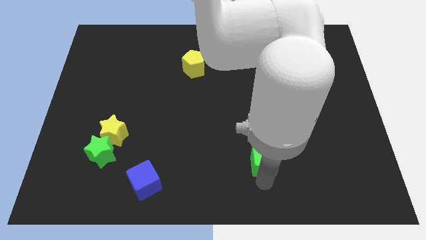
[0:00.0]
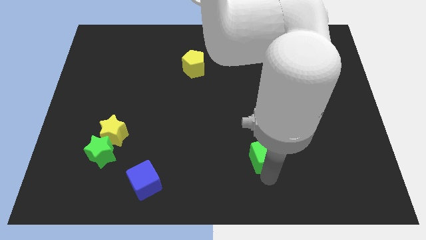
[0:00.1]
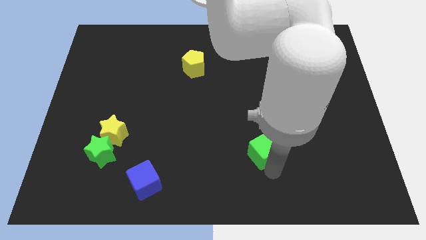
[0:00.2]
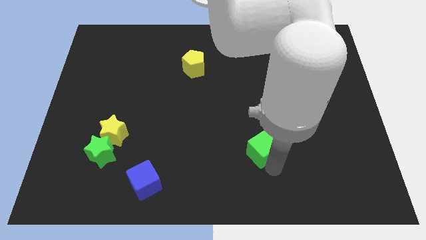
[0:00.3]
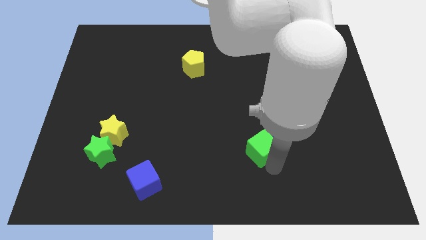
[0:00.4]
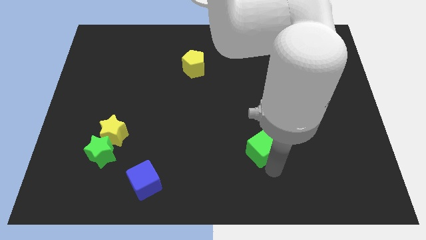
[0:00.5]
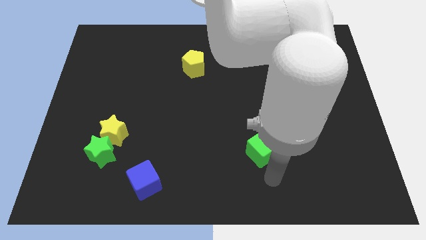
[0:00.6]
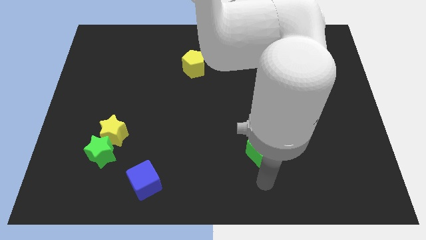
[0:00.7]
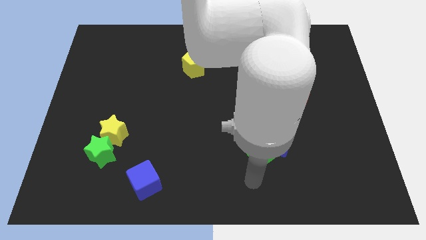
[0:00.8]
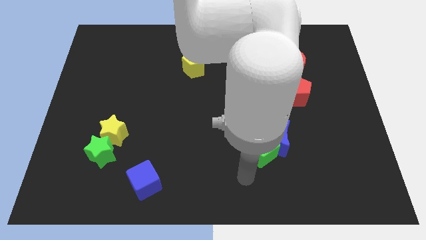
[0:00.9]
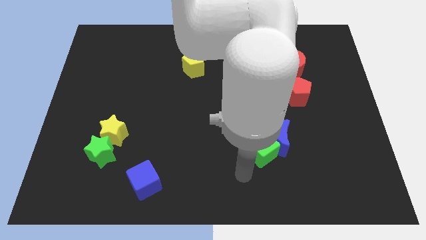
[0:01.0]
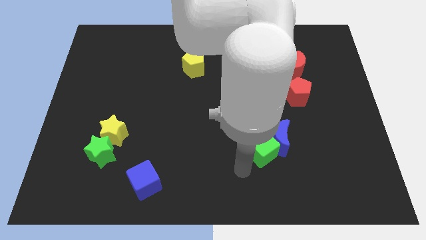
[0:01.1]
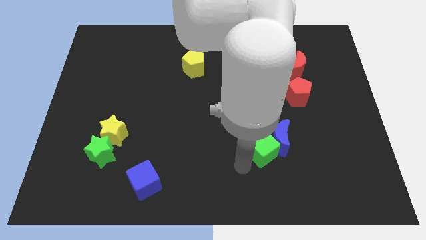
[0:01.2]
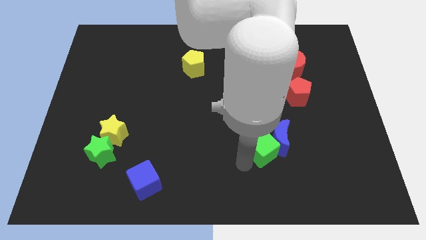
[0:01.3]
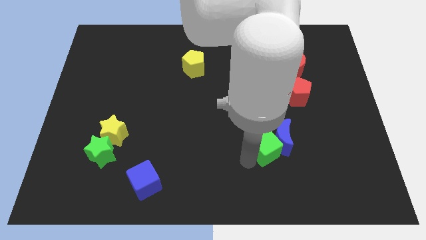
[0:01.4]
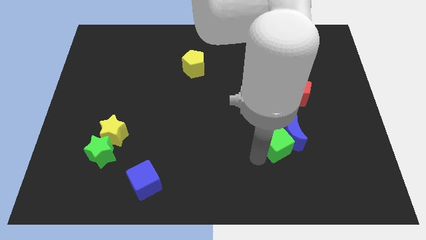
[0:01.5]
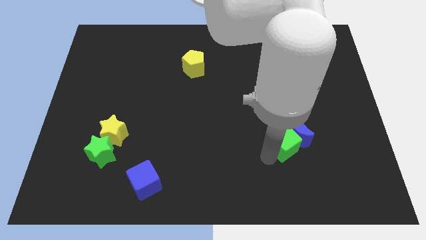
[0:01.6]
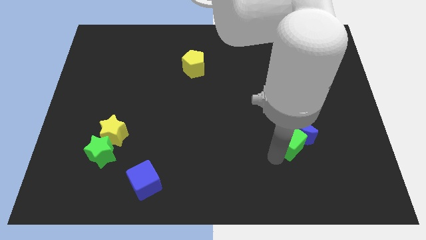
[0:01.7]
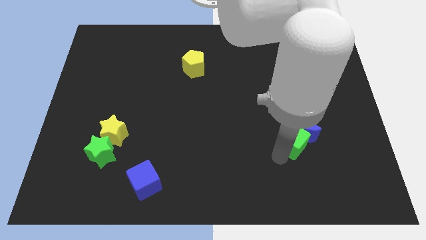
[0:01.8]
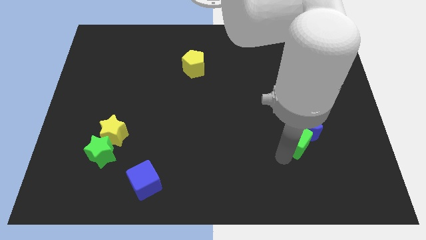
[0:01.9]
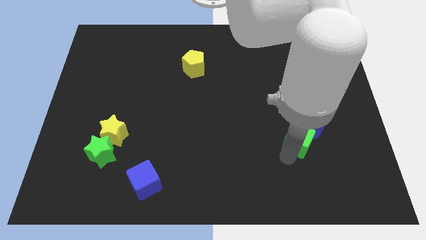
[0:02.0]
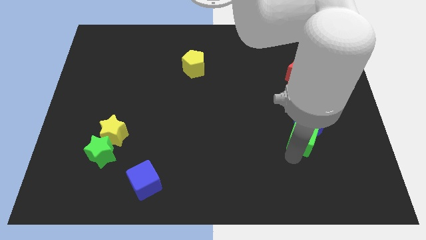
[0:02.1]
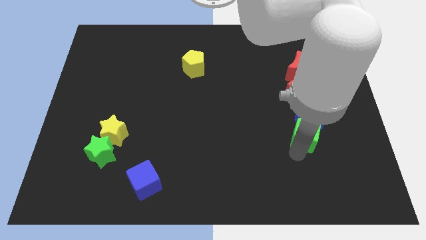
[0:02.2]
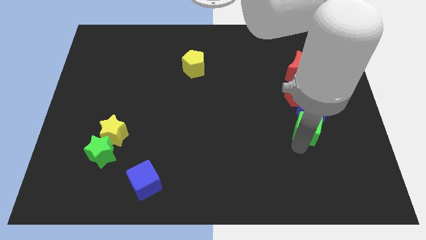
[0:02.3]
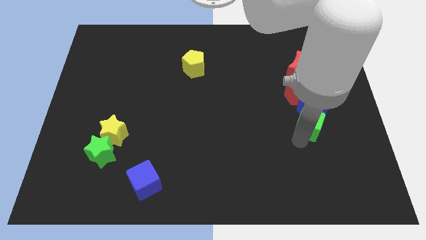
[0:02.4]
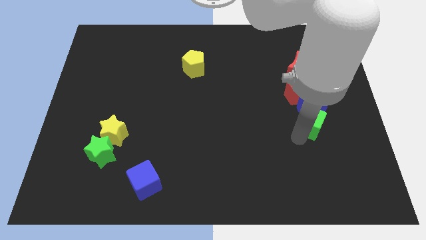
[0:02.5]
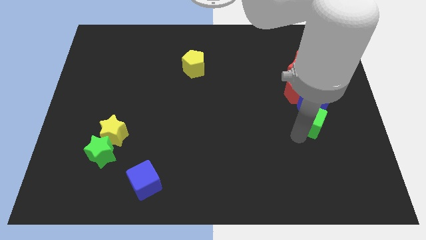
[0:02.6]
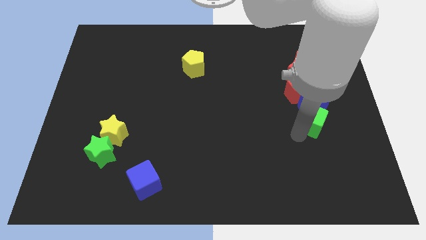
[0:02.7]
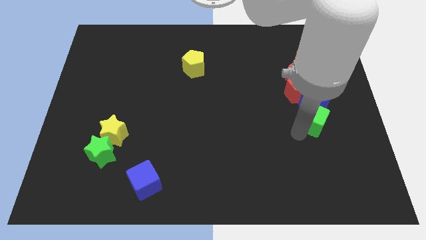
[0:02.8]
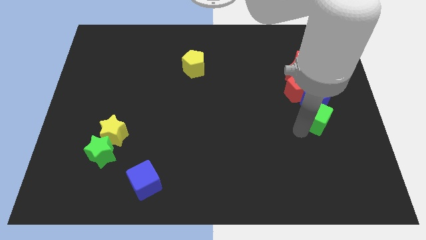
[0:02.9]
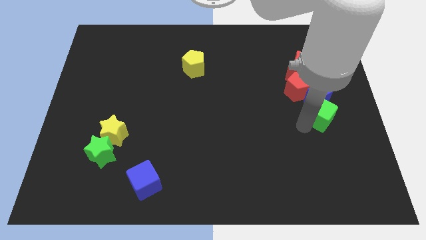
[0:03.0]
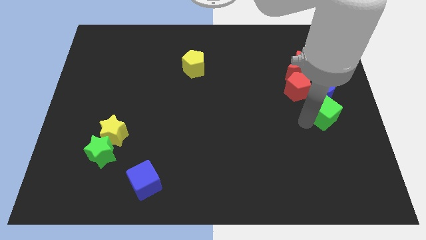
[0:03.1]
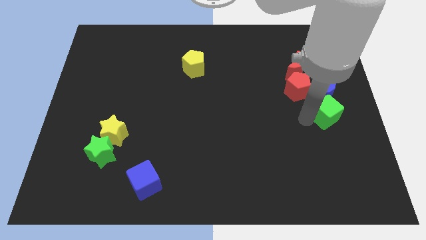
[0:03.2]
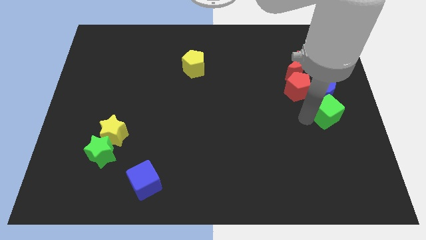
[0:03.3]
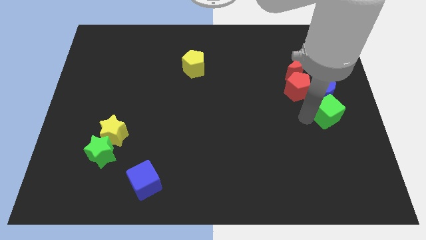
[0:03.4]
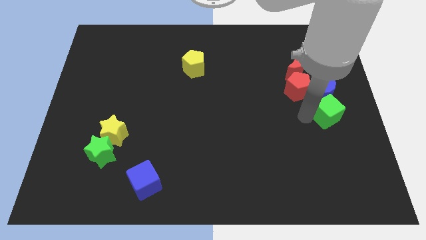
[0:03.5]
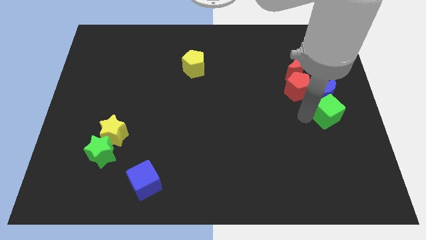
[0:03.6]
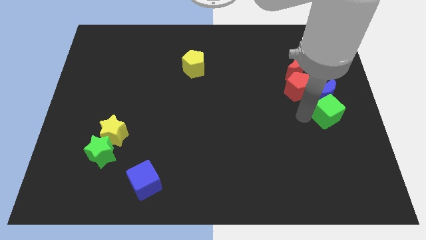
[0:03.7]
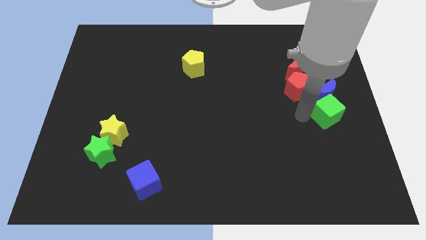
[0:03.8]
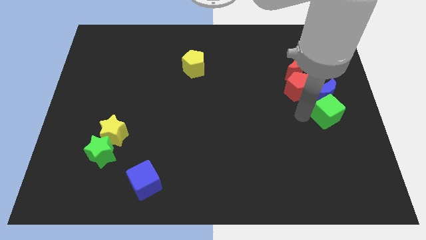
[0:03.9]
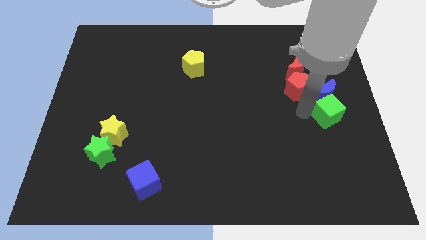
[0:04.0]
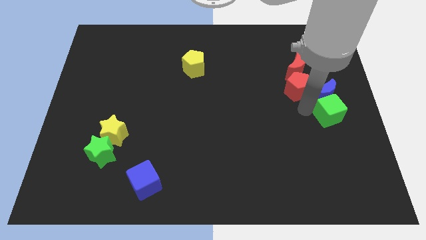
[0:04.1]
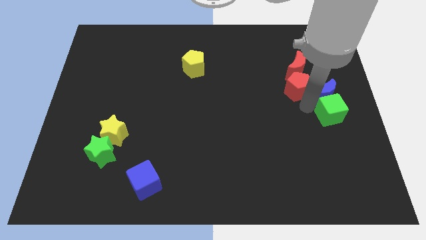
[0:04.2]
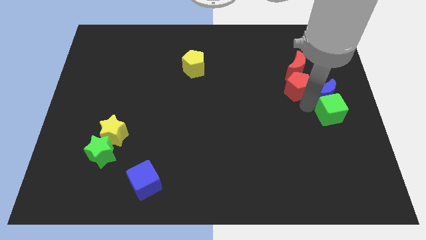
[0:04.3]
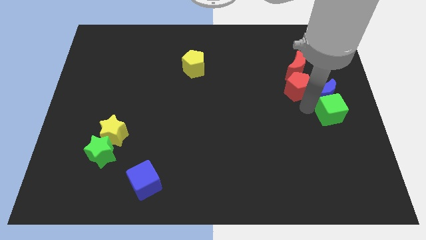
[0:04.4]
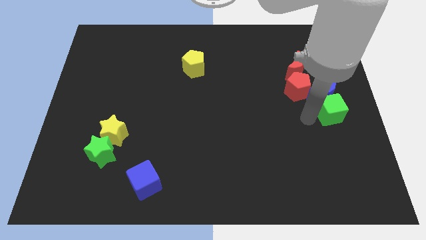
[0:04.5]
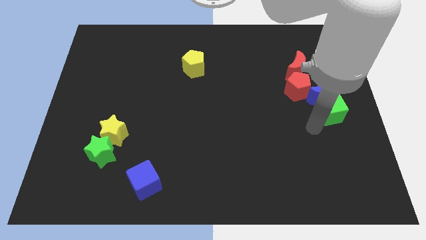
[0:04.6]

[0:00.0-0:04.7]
move the blue crescent with the green cube towards the right side of the red pentagon

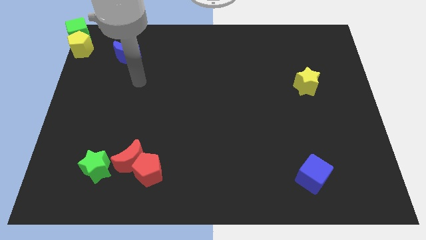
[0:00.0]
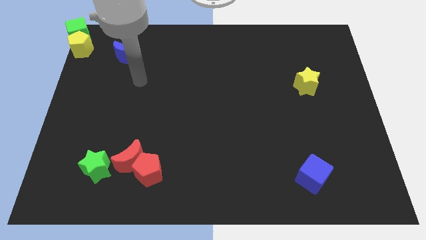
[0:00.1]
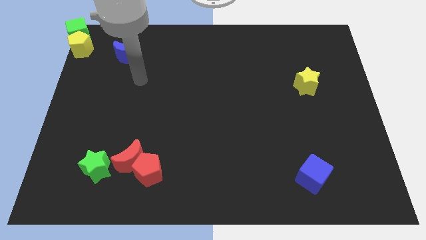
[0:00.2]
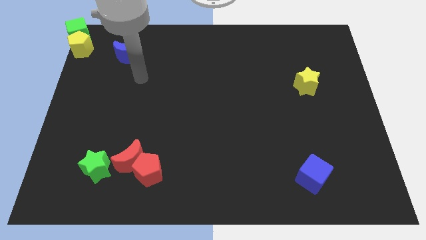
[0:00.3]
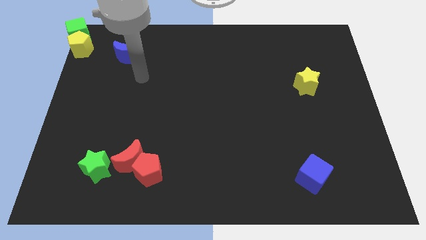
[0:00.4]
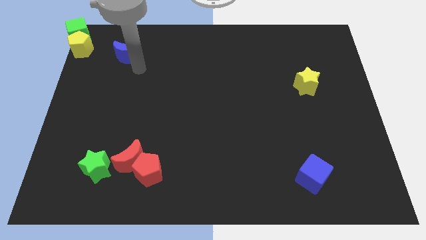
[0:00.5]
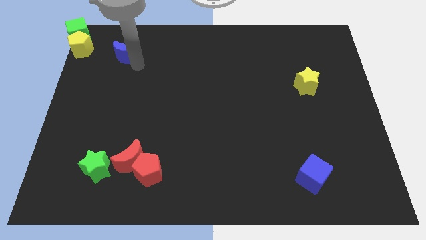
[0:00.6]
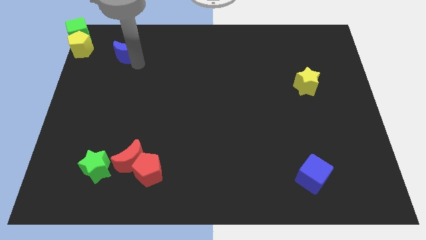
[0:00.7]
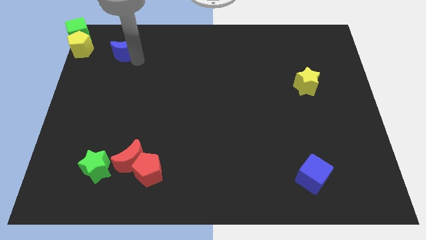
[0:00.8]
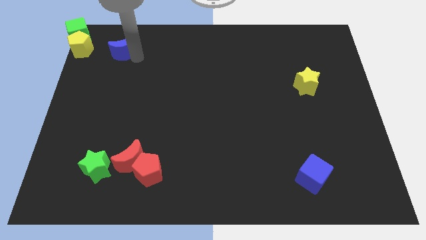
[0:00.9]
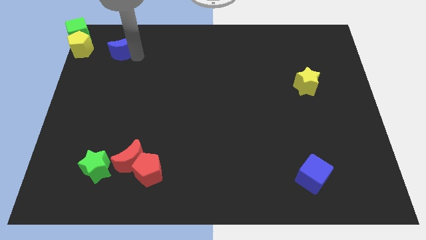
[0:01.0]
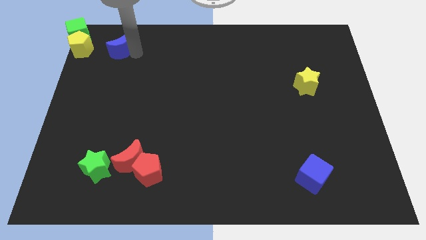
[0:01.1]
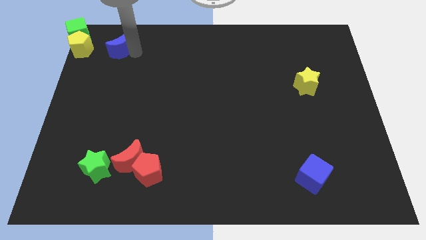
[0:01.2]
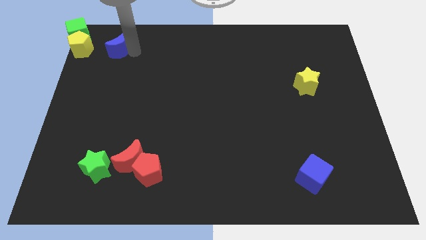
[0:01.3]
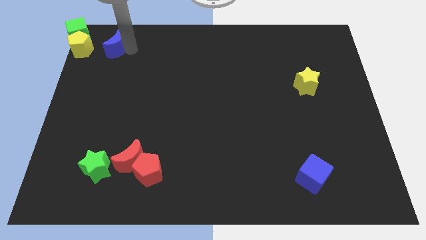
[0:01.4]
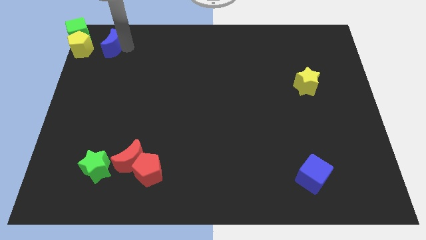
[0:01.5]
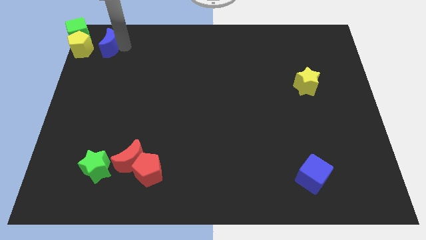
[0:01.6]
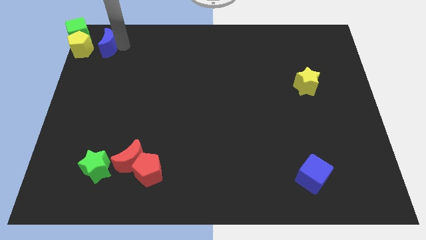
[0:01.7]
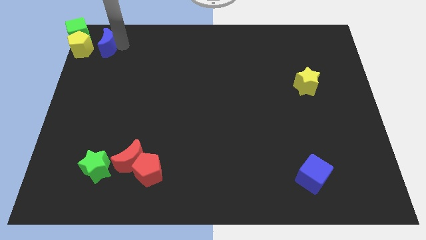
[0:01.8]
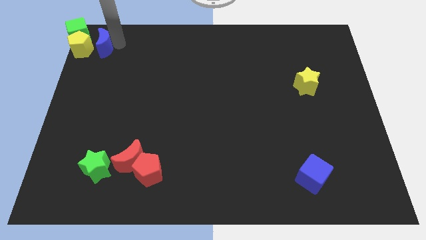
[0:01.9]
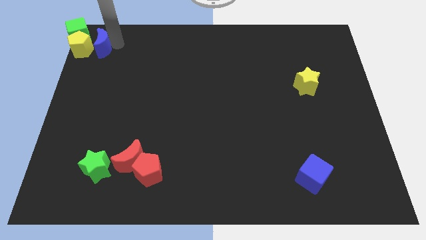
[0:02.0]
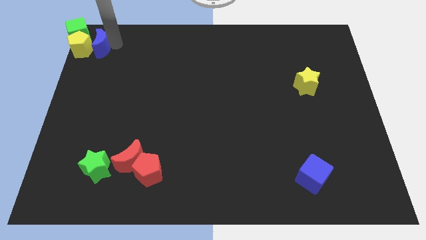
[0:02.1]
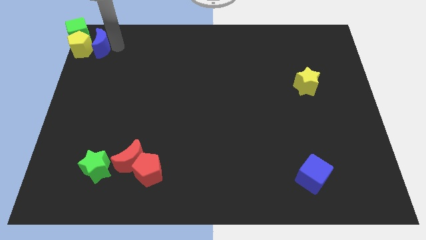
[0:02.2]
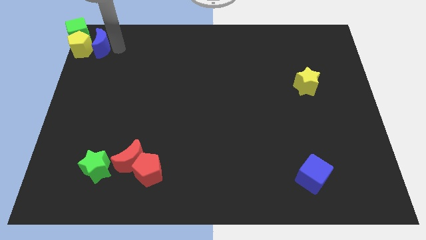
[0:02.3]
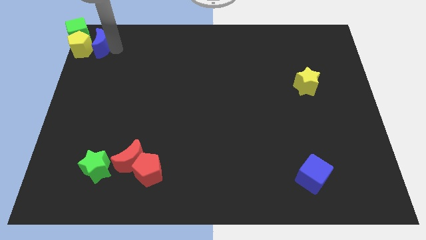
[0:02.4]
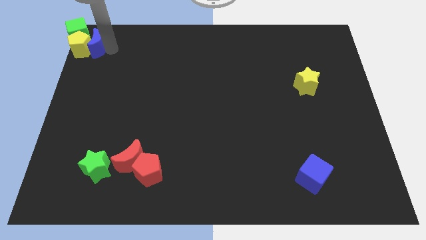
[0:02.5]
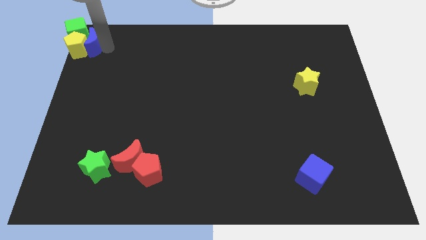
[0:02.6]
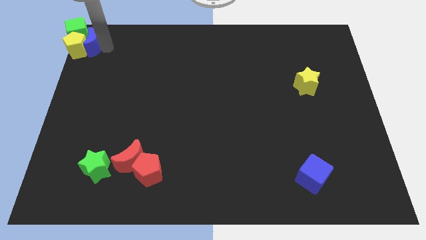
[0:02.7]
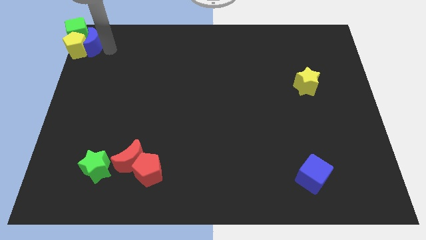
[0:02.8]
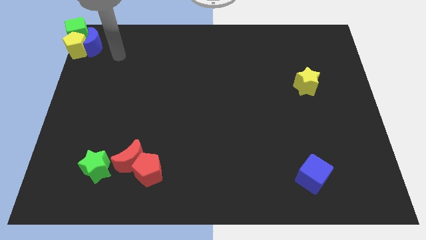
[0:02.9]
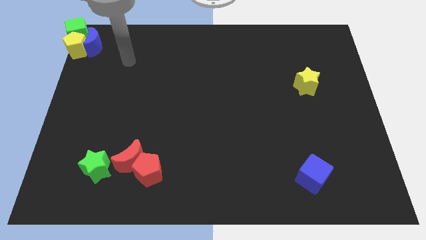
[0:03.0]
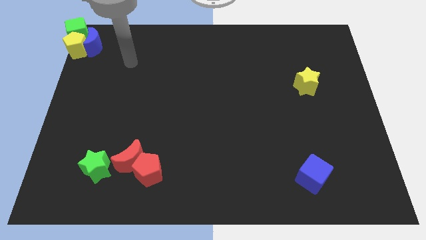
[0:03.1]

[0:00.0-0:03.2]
place blue crescent near to yellow pentagon

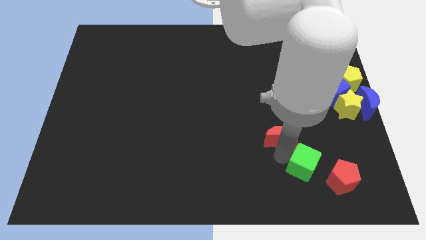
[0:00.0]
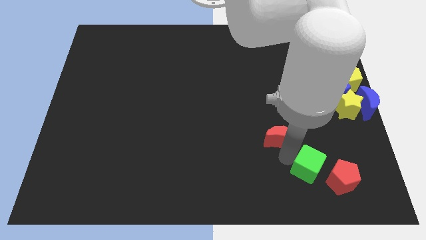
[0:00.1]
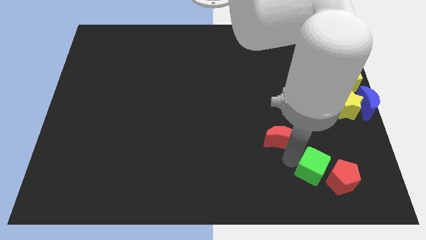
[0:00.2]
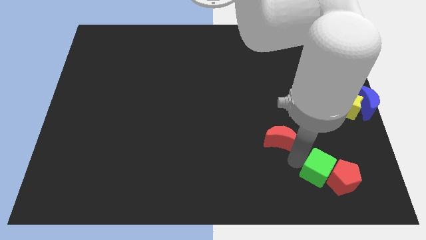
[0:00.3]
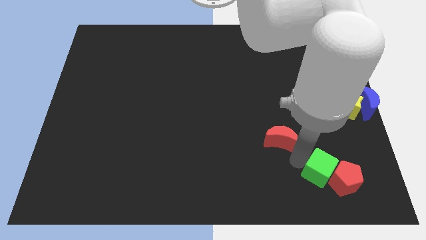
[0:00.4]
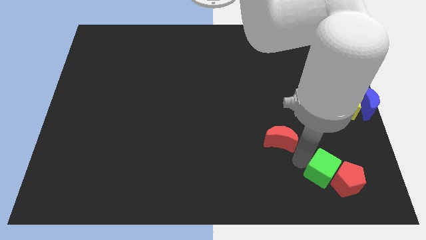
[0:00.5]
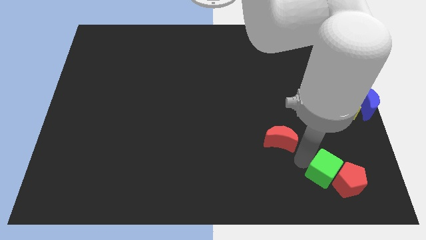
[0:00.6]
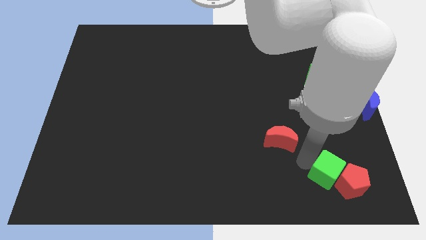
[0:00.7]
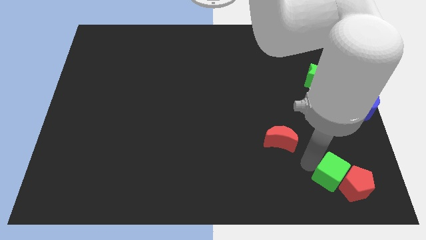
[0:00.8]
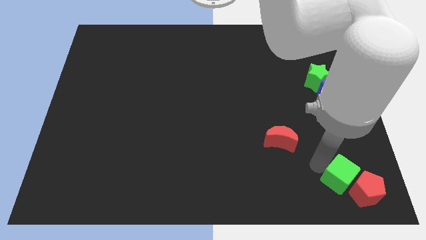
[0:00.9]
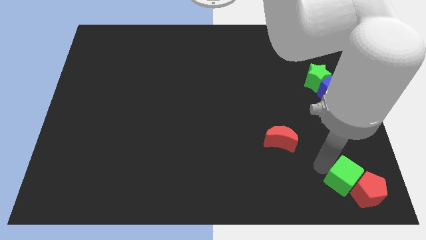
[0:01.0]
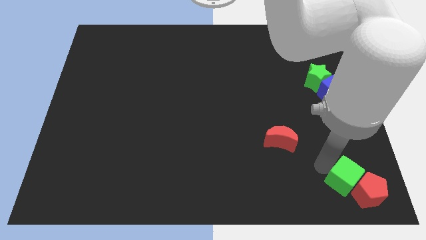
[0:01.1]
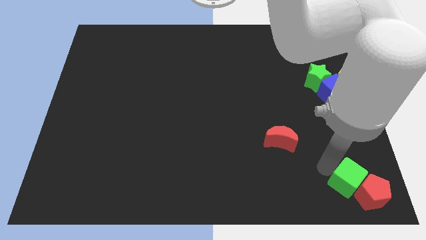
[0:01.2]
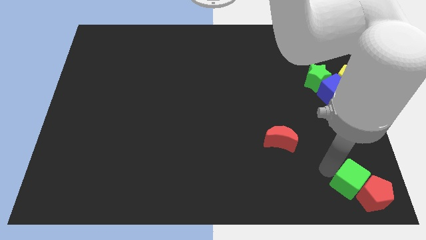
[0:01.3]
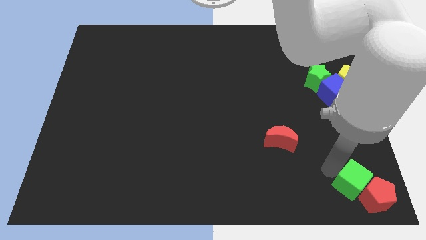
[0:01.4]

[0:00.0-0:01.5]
push the green cube into the red pentagon
